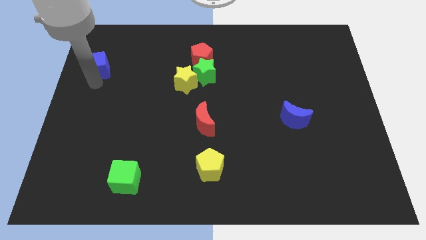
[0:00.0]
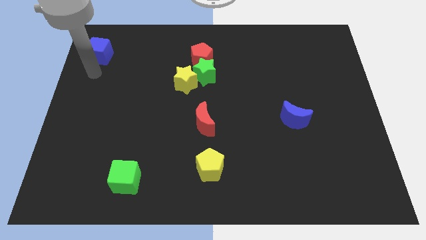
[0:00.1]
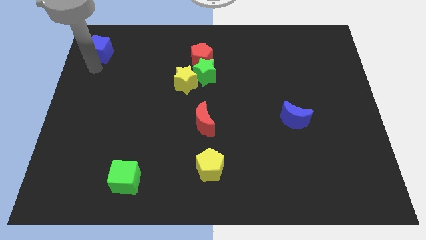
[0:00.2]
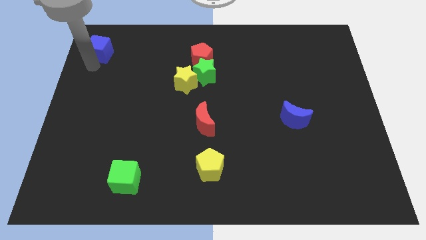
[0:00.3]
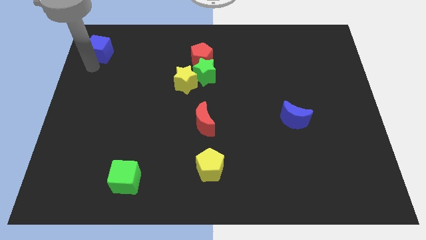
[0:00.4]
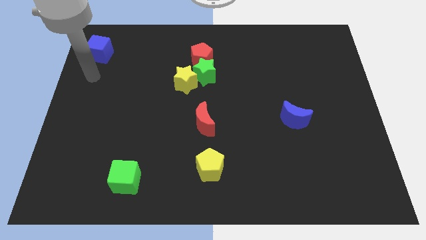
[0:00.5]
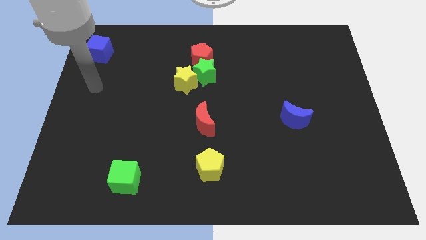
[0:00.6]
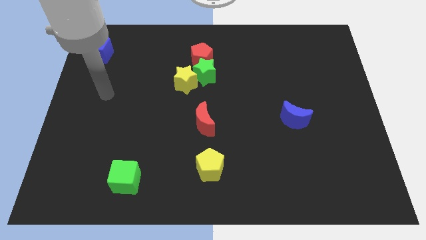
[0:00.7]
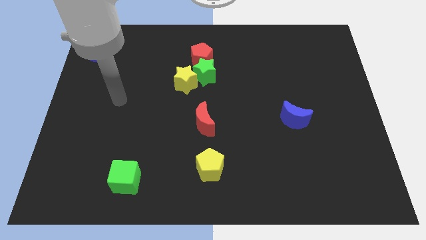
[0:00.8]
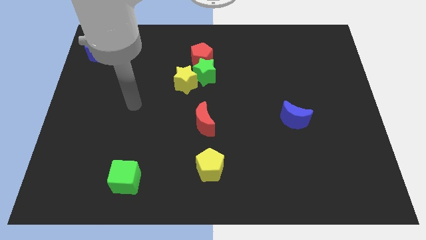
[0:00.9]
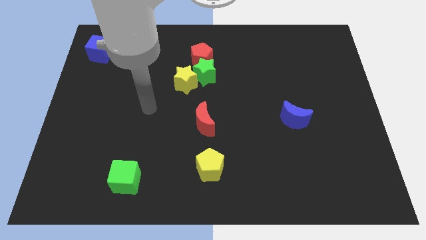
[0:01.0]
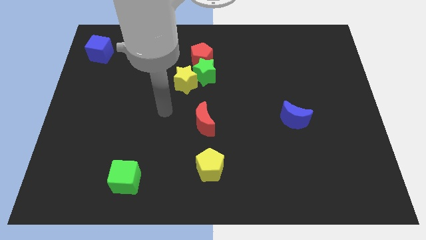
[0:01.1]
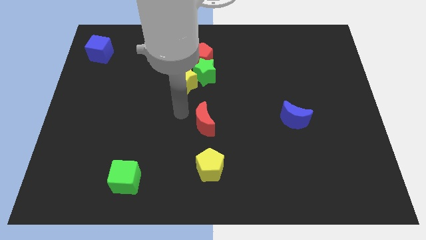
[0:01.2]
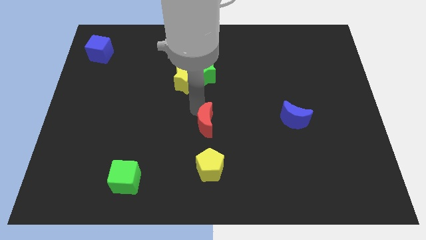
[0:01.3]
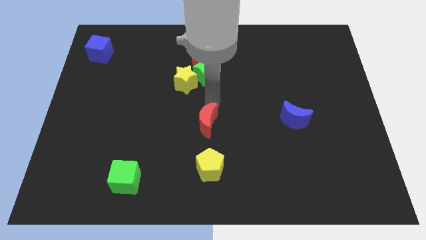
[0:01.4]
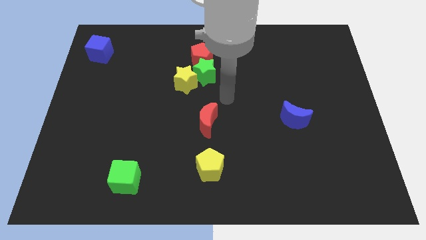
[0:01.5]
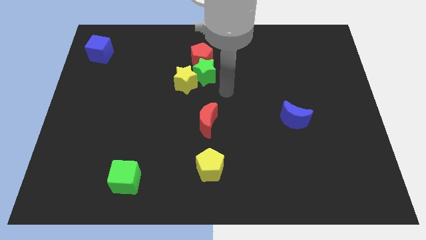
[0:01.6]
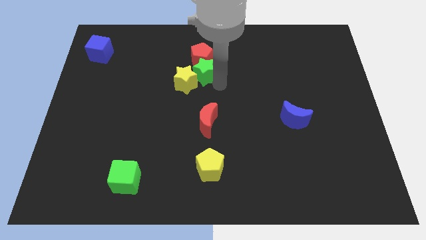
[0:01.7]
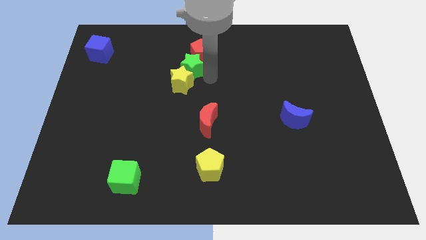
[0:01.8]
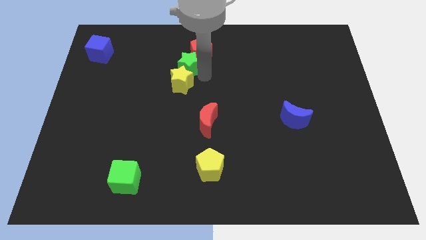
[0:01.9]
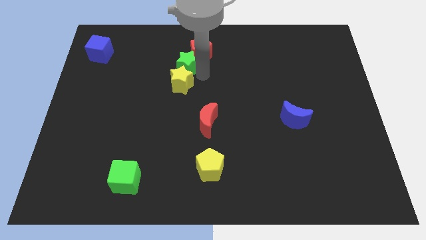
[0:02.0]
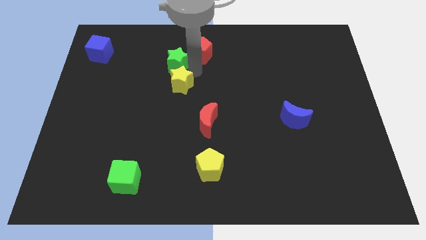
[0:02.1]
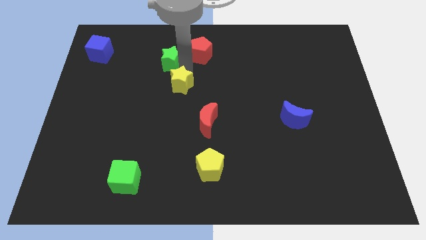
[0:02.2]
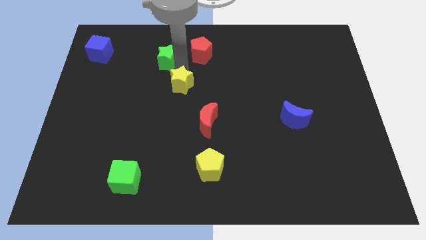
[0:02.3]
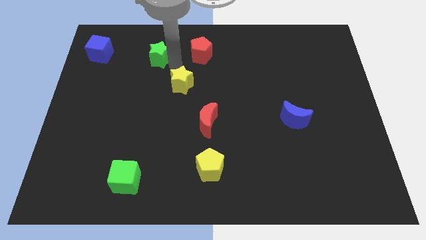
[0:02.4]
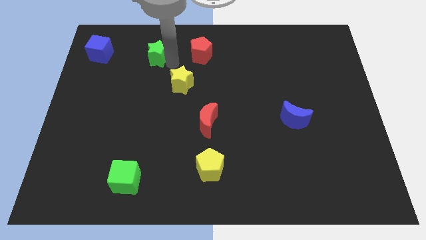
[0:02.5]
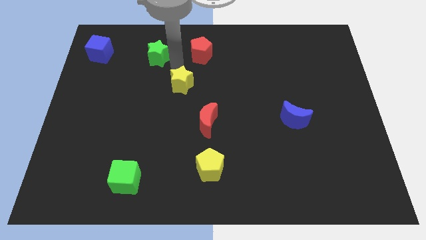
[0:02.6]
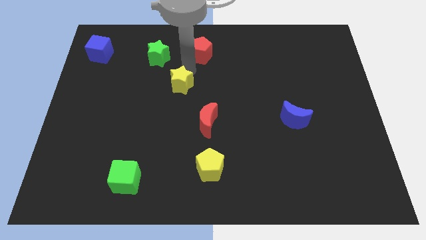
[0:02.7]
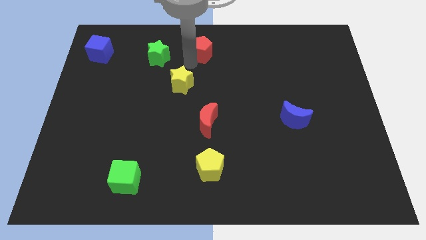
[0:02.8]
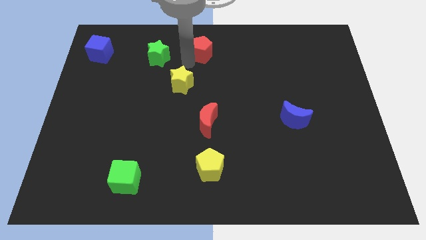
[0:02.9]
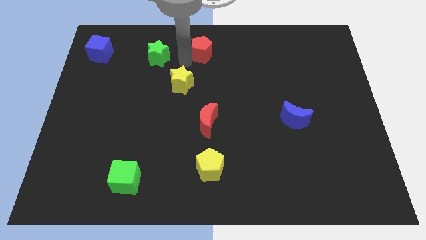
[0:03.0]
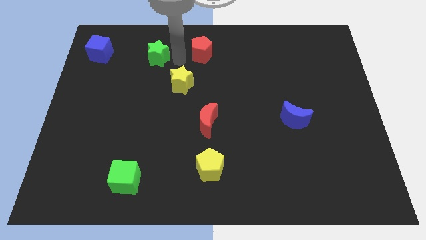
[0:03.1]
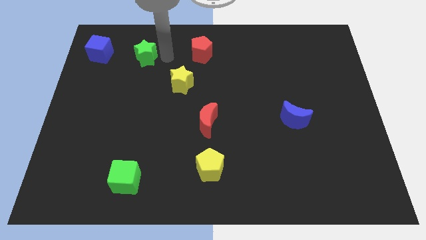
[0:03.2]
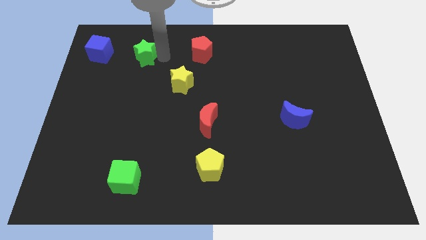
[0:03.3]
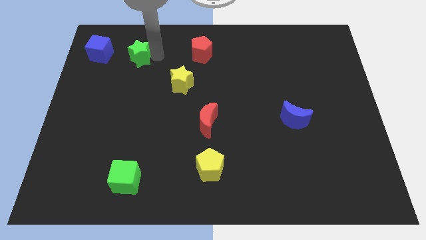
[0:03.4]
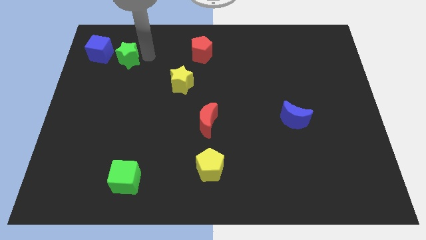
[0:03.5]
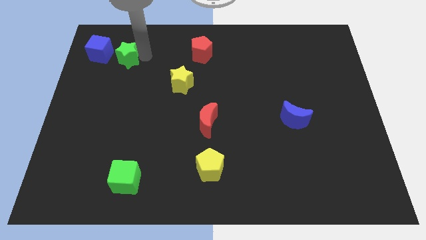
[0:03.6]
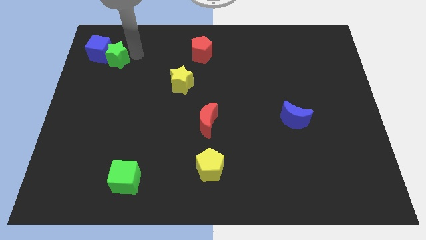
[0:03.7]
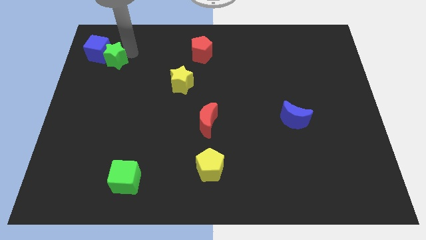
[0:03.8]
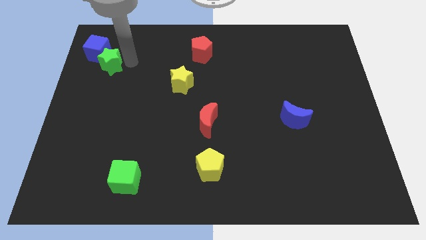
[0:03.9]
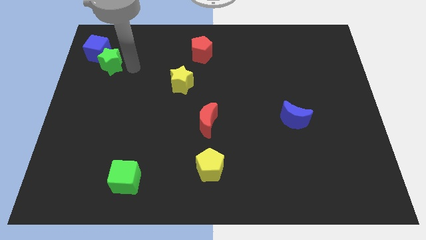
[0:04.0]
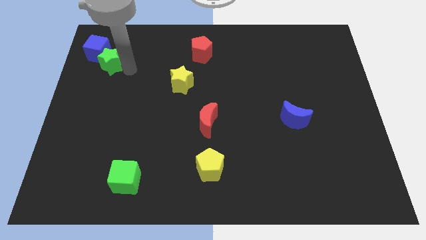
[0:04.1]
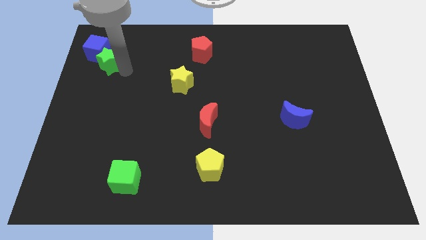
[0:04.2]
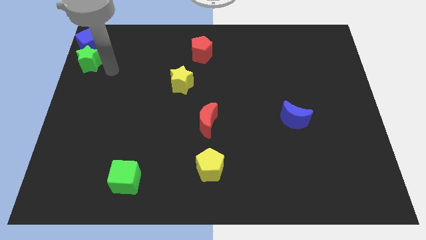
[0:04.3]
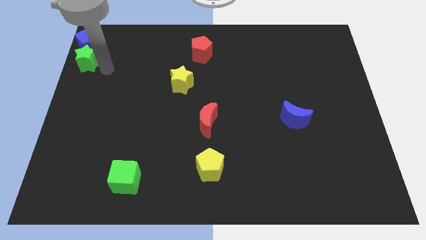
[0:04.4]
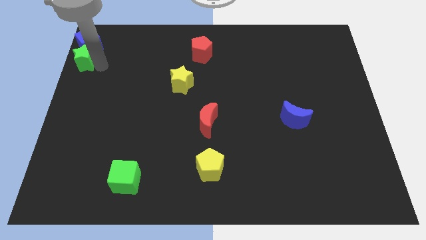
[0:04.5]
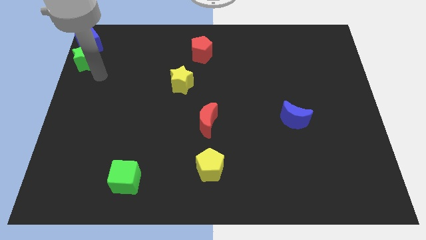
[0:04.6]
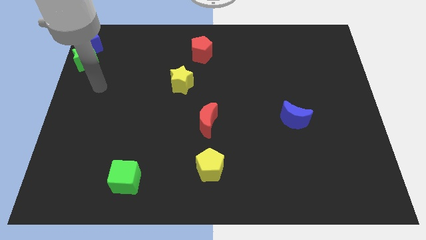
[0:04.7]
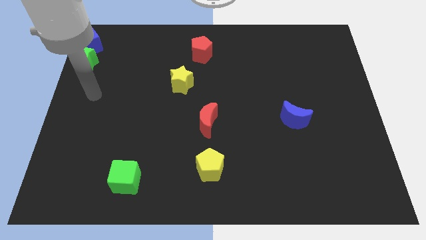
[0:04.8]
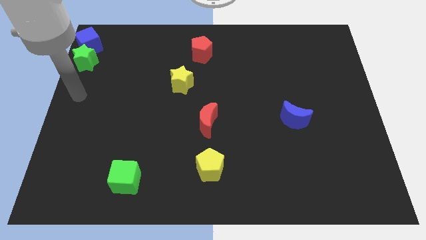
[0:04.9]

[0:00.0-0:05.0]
place the green star below the blue cube

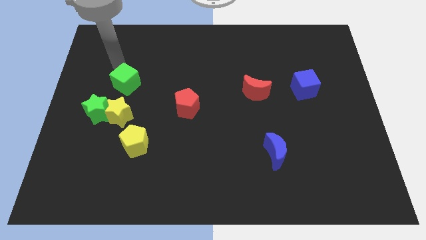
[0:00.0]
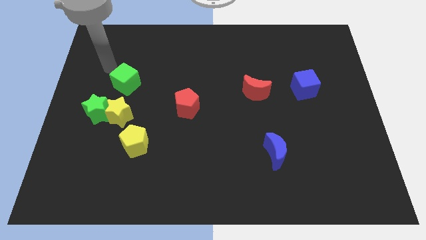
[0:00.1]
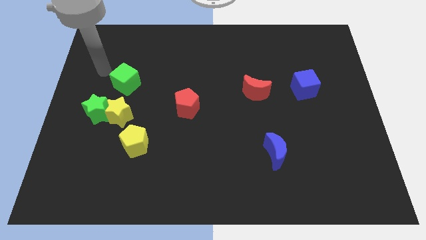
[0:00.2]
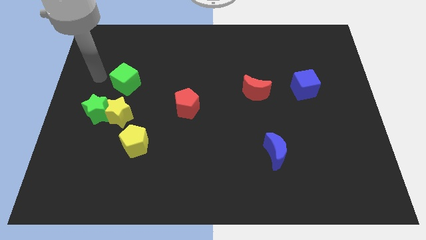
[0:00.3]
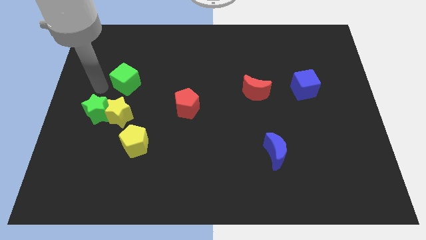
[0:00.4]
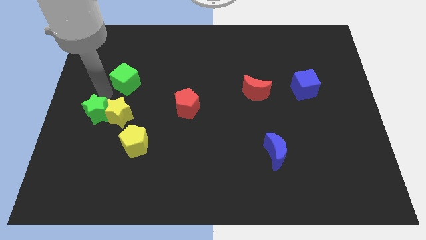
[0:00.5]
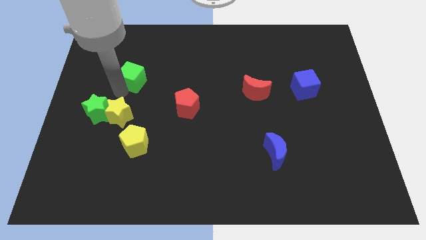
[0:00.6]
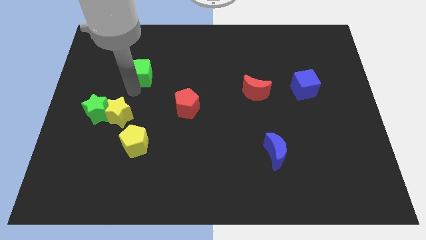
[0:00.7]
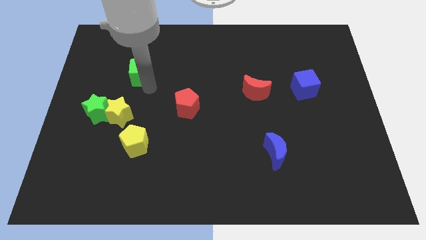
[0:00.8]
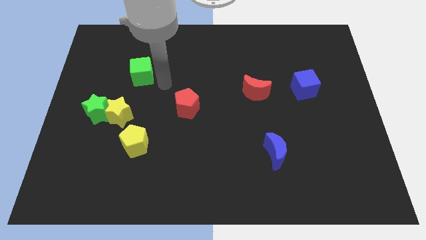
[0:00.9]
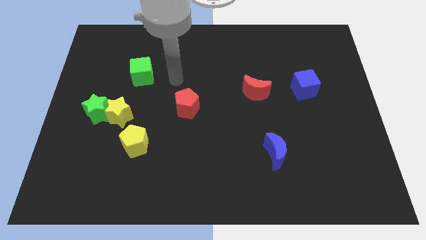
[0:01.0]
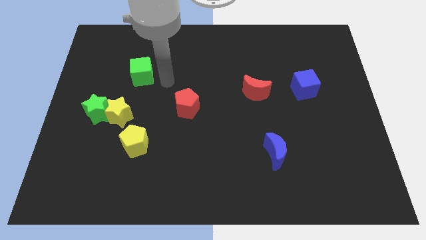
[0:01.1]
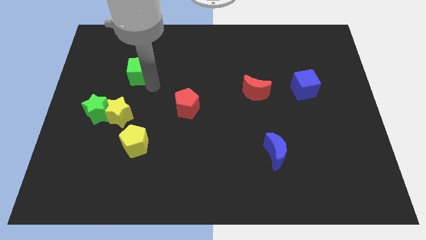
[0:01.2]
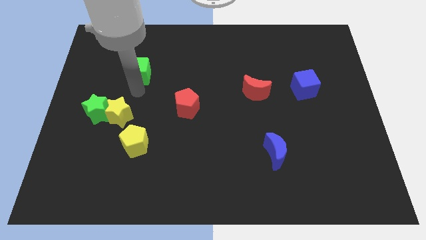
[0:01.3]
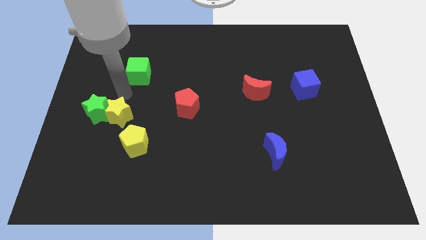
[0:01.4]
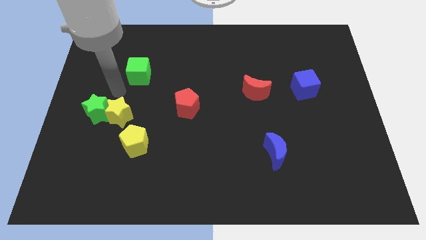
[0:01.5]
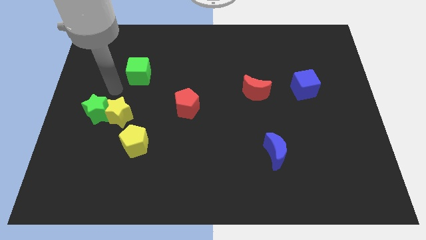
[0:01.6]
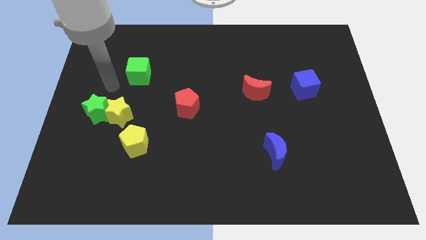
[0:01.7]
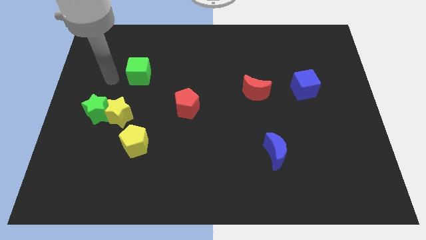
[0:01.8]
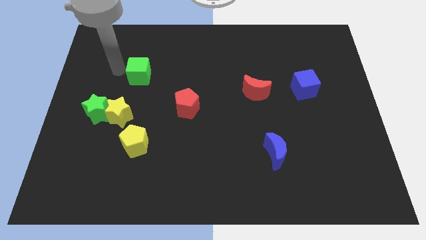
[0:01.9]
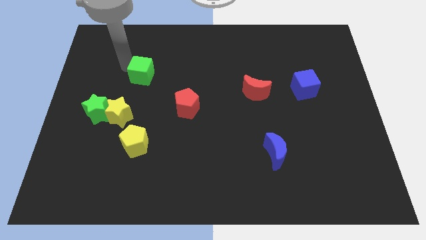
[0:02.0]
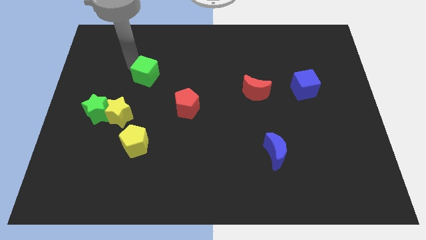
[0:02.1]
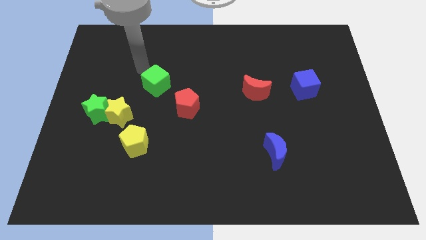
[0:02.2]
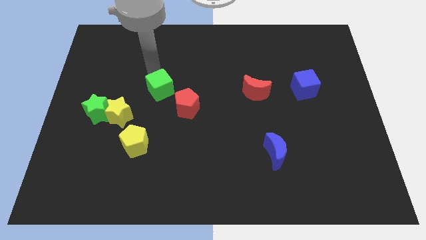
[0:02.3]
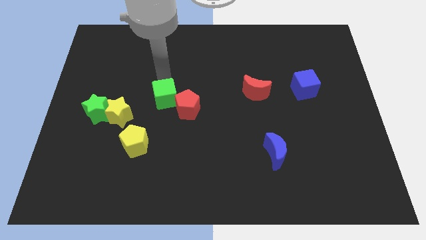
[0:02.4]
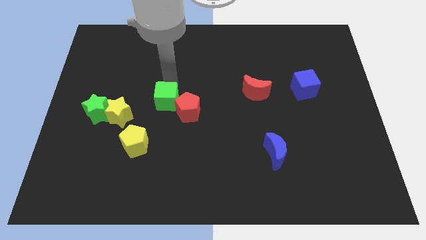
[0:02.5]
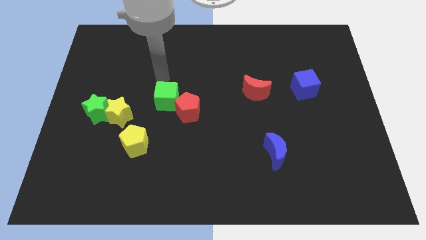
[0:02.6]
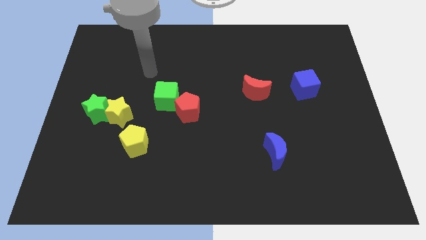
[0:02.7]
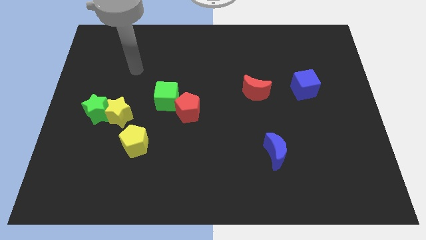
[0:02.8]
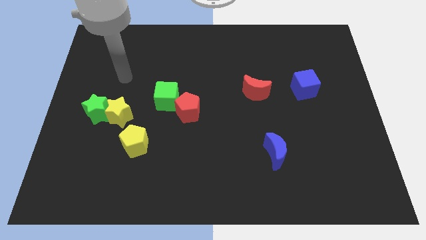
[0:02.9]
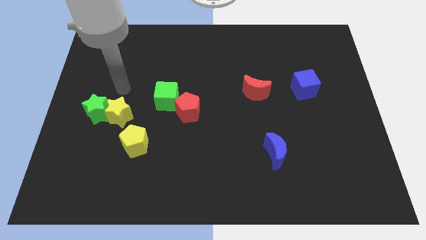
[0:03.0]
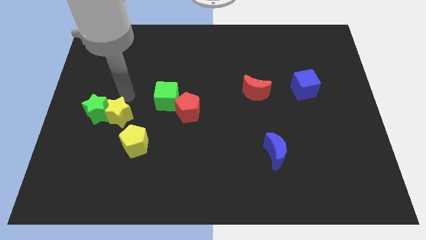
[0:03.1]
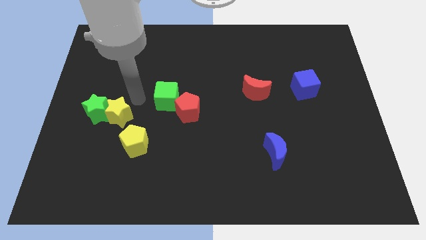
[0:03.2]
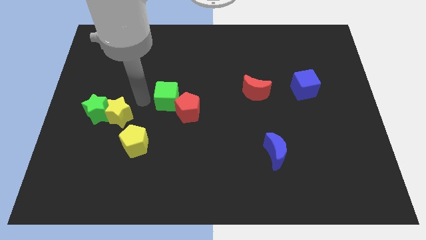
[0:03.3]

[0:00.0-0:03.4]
push the green cube into the red pentagon

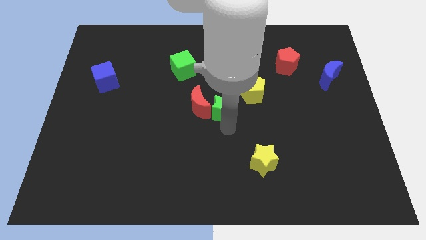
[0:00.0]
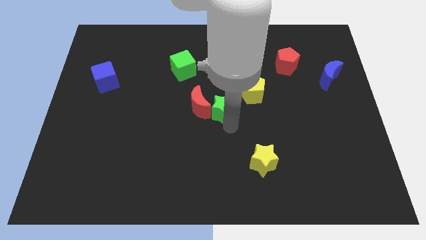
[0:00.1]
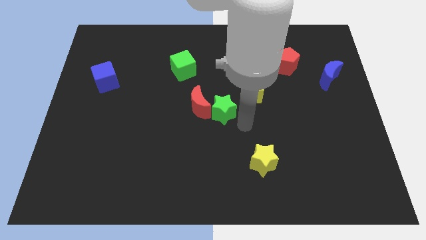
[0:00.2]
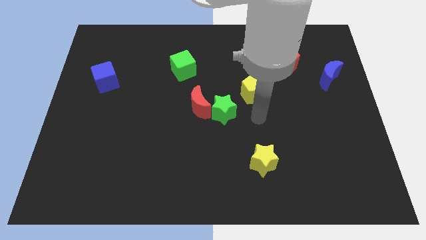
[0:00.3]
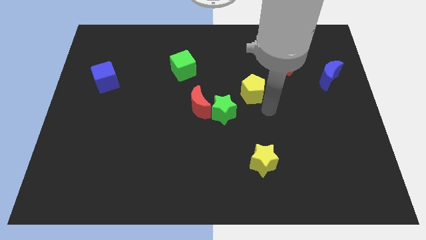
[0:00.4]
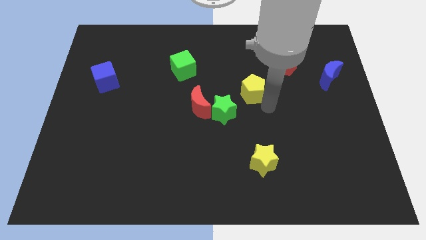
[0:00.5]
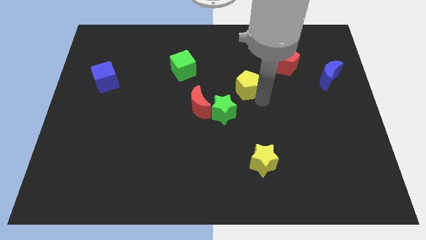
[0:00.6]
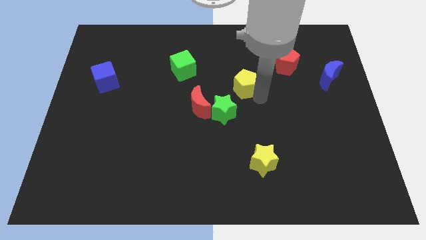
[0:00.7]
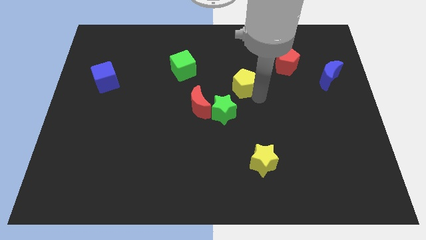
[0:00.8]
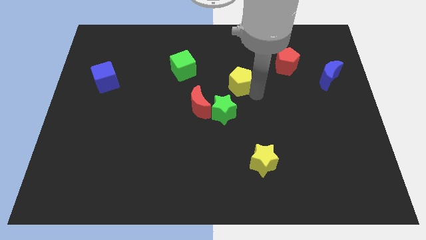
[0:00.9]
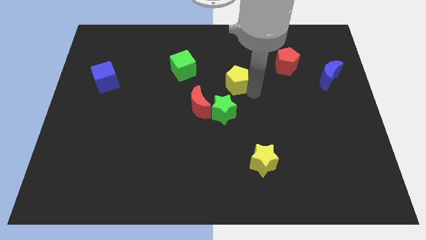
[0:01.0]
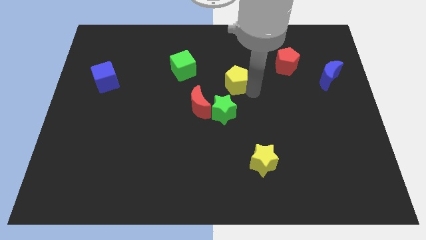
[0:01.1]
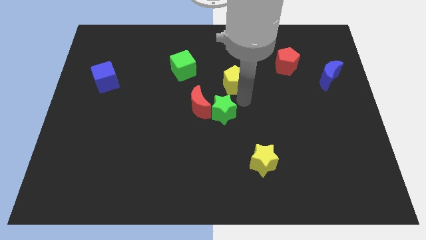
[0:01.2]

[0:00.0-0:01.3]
move the yellow pentagon to the top side of the green star
